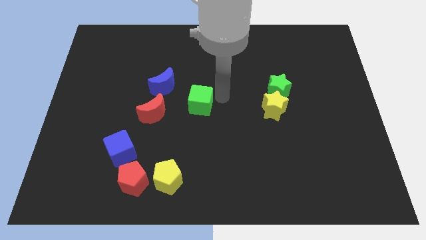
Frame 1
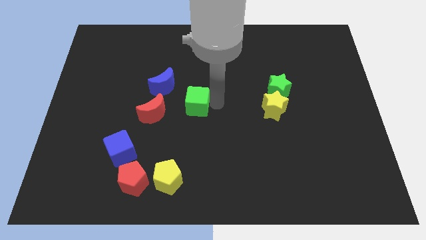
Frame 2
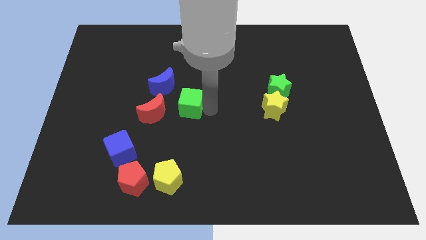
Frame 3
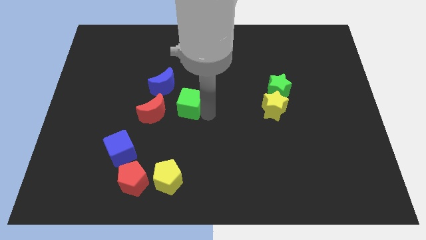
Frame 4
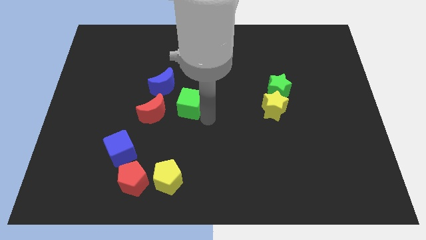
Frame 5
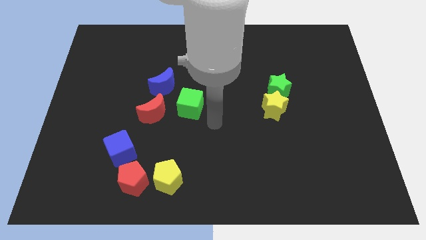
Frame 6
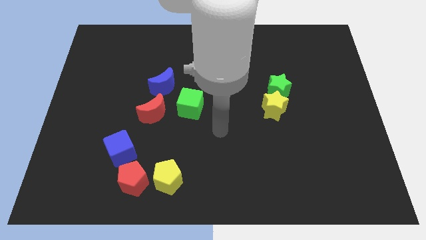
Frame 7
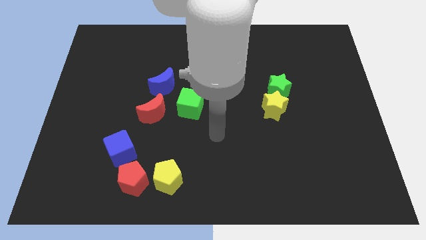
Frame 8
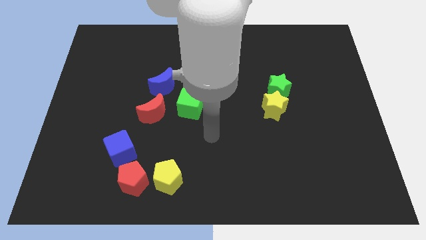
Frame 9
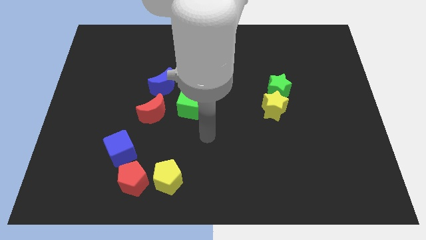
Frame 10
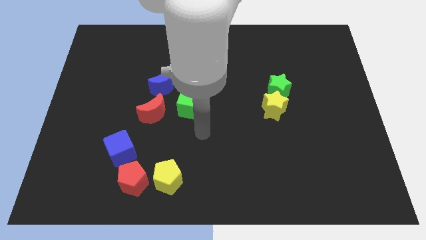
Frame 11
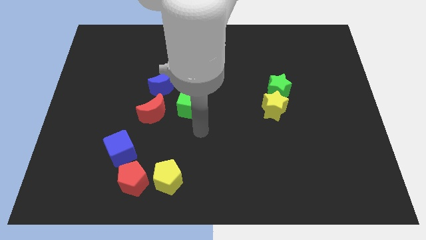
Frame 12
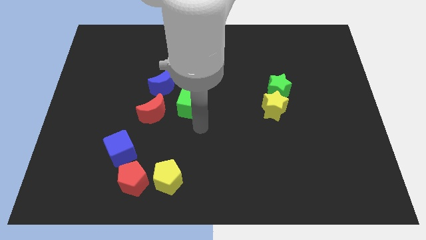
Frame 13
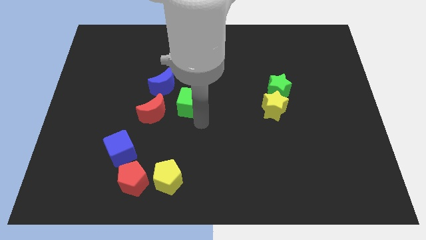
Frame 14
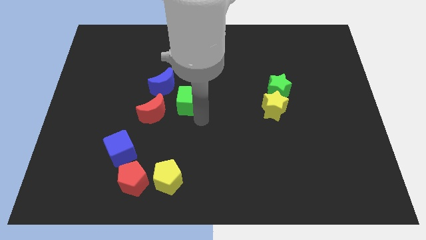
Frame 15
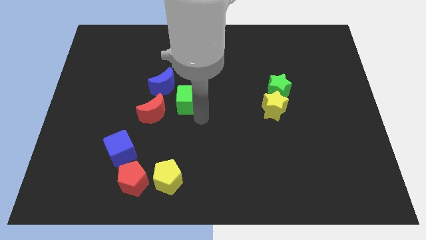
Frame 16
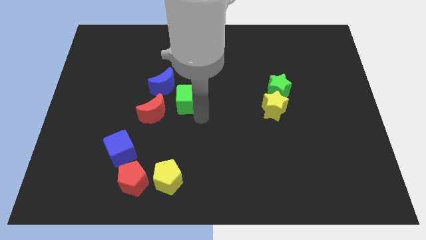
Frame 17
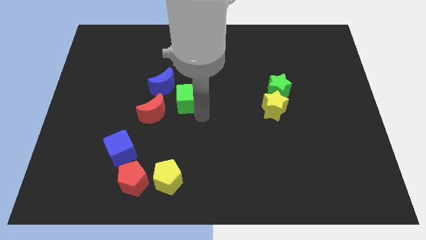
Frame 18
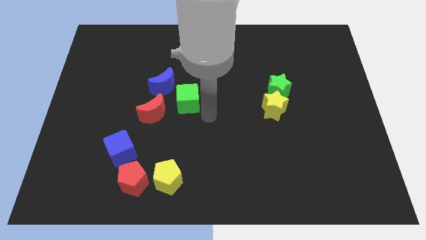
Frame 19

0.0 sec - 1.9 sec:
place green cube a bit near to red crescent and blue crescent

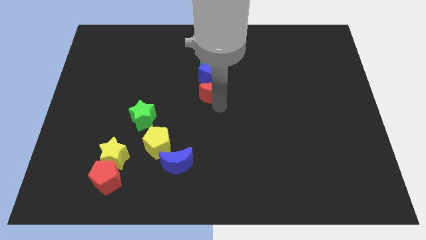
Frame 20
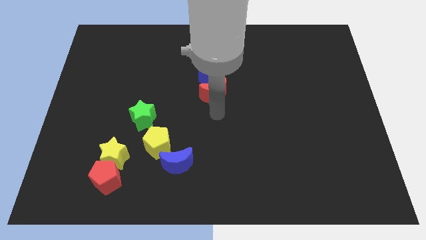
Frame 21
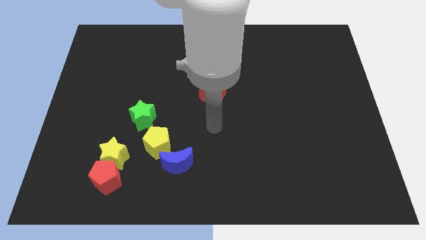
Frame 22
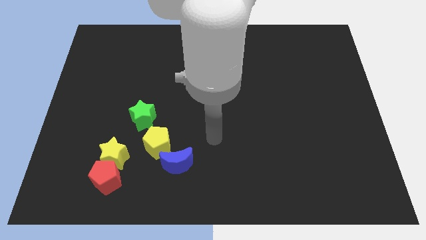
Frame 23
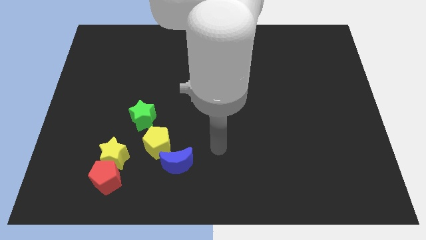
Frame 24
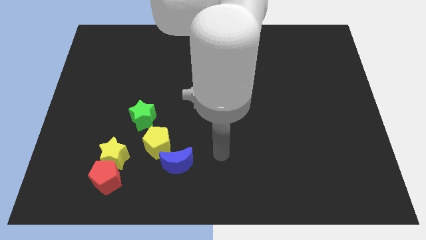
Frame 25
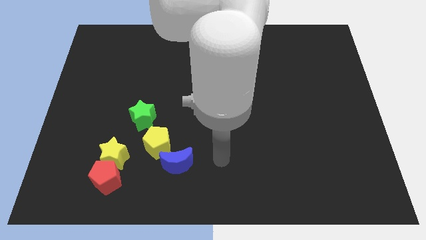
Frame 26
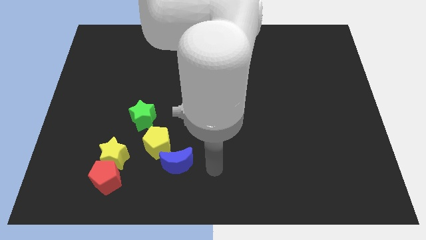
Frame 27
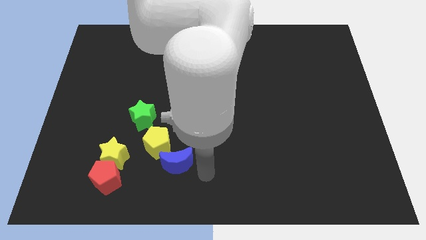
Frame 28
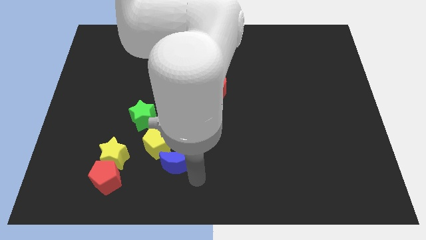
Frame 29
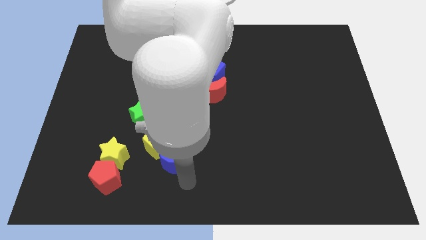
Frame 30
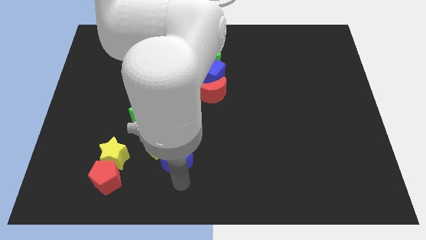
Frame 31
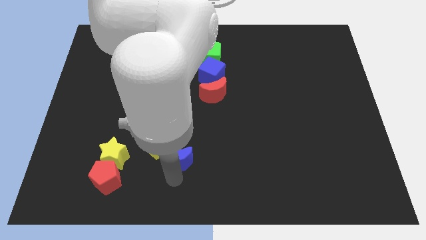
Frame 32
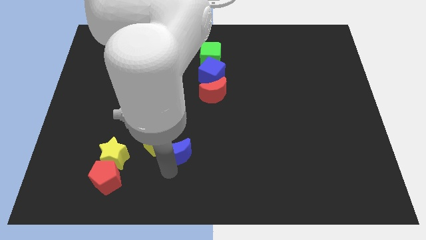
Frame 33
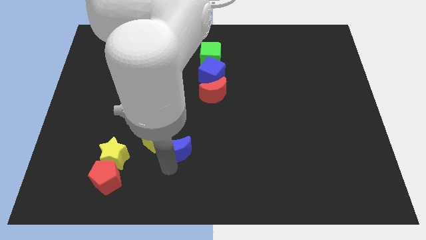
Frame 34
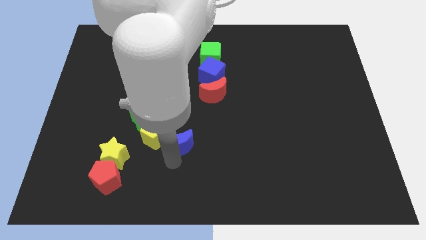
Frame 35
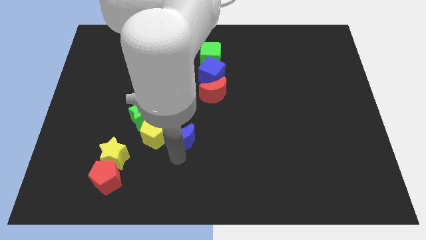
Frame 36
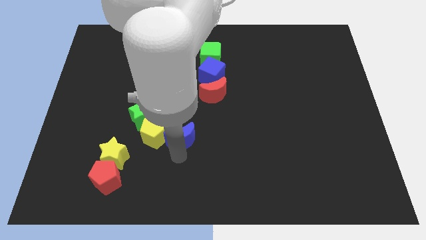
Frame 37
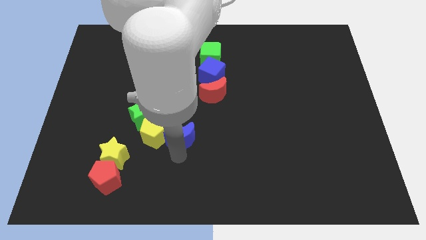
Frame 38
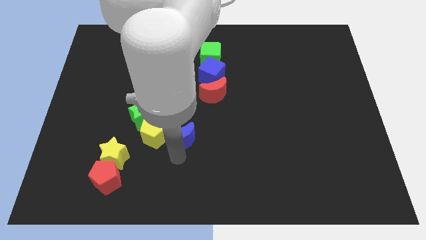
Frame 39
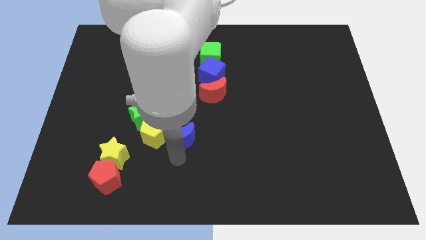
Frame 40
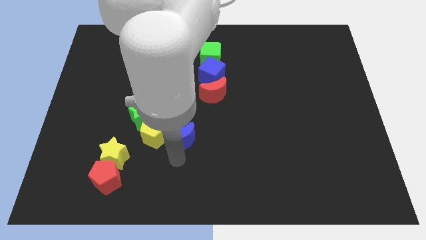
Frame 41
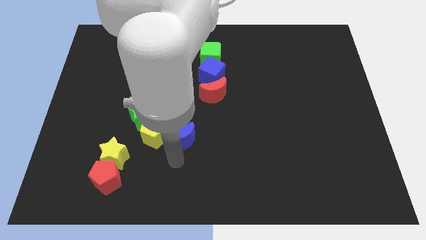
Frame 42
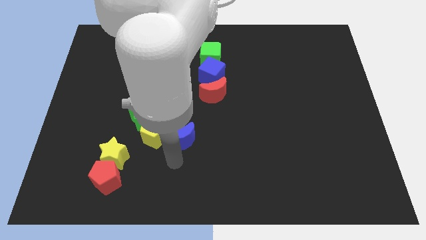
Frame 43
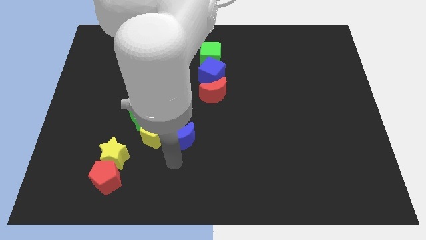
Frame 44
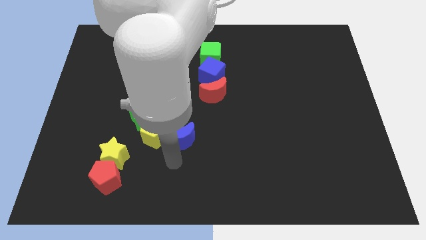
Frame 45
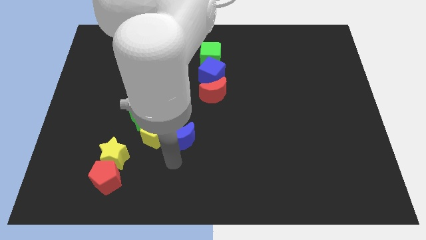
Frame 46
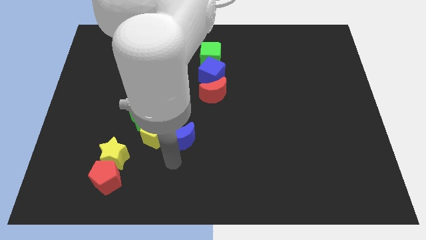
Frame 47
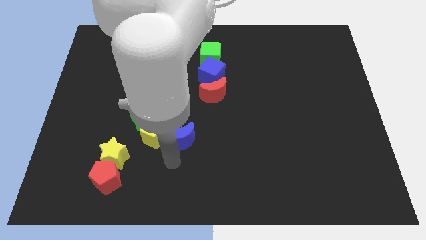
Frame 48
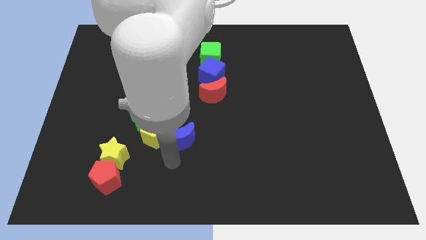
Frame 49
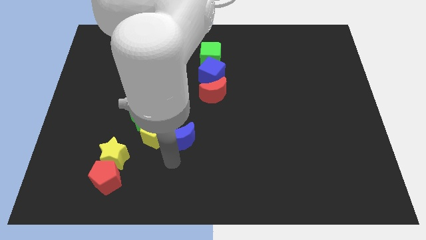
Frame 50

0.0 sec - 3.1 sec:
push the blue crescent to the right of the yellow pentagon

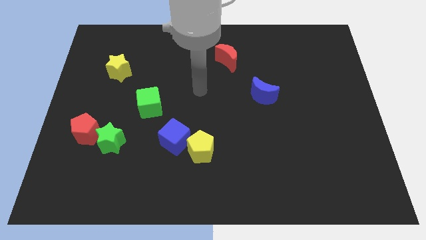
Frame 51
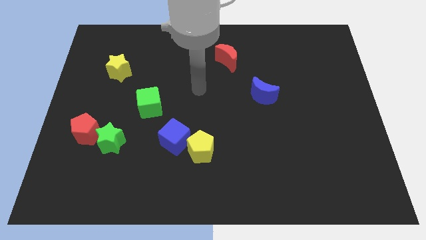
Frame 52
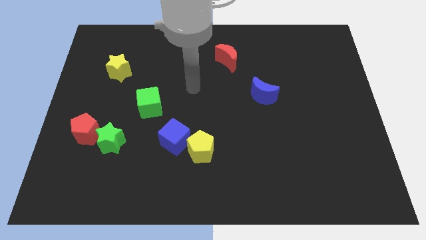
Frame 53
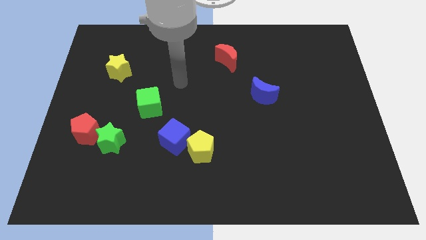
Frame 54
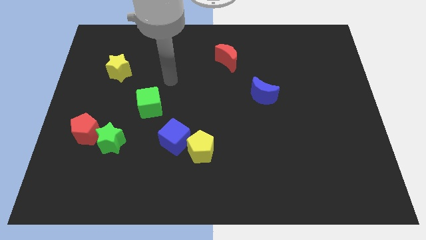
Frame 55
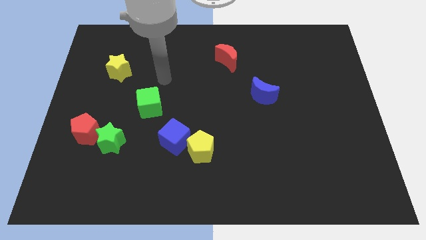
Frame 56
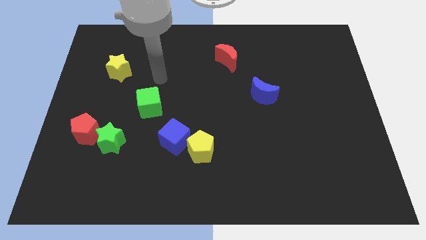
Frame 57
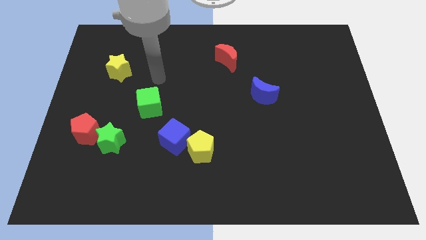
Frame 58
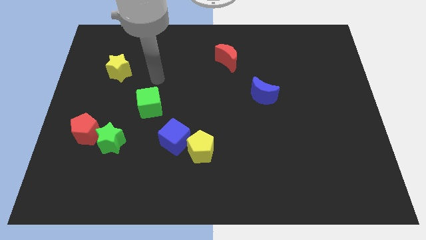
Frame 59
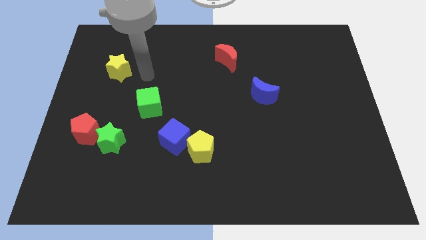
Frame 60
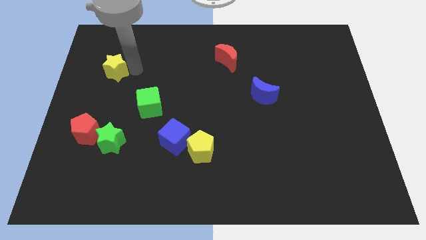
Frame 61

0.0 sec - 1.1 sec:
touch the right side of the yellow star

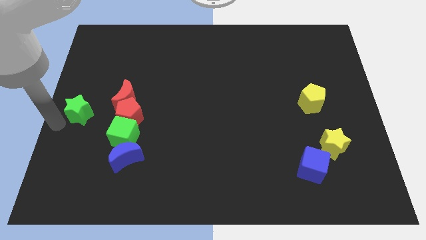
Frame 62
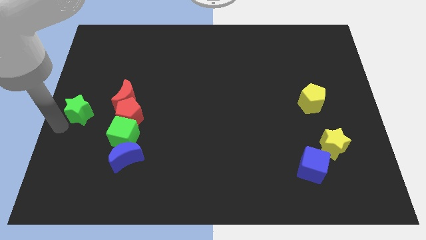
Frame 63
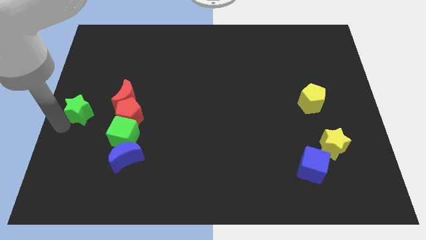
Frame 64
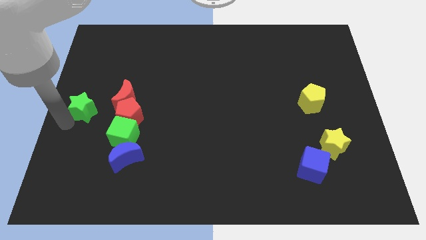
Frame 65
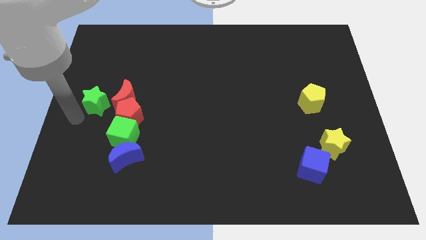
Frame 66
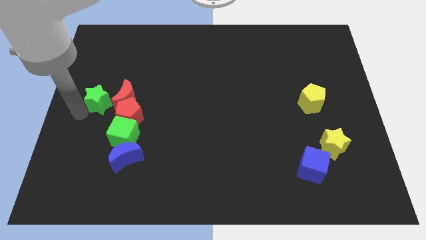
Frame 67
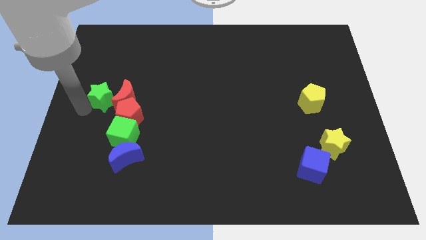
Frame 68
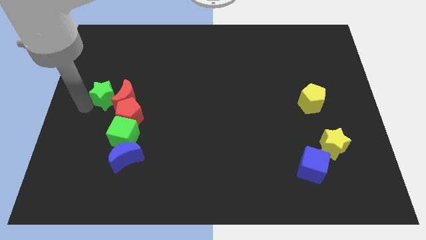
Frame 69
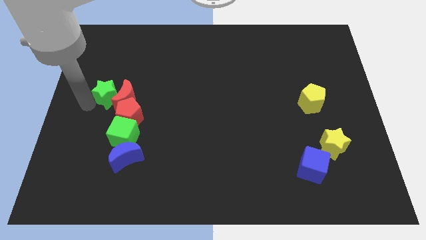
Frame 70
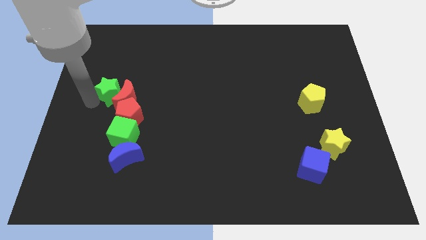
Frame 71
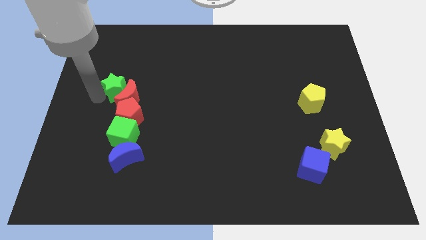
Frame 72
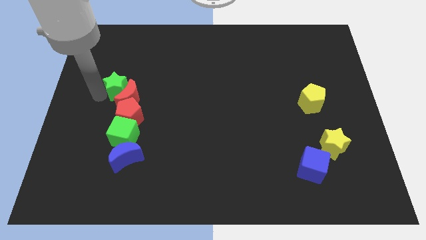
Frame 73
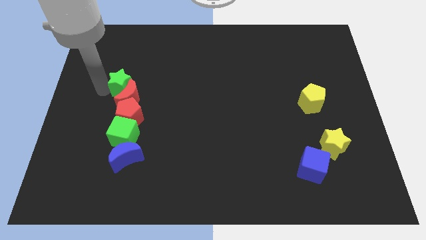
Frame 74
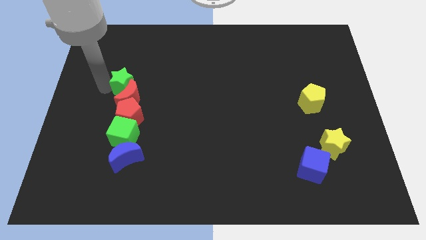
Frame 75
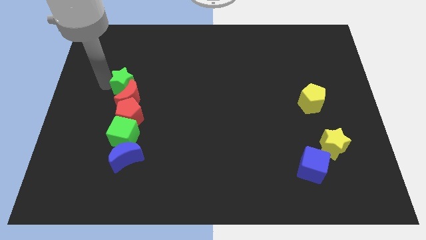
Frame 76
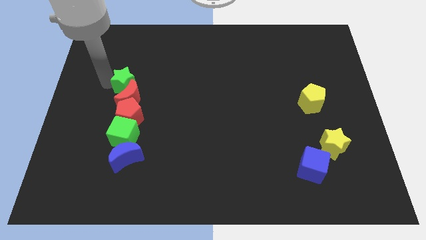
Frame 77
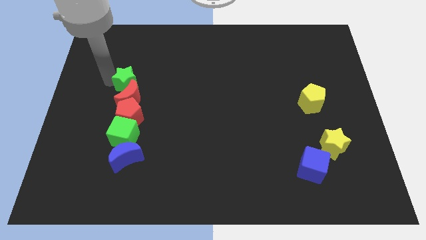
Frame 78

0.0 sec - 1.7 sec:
place the green star above the red crescent

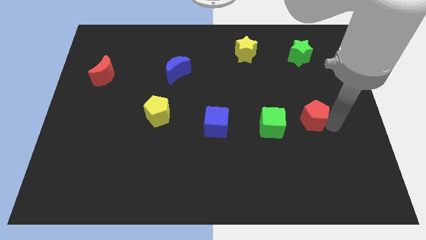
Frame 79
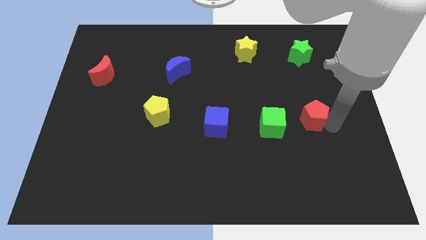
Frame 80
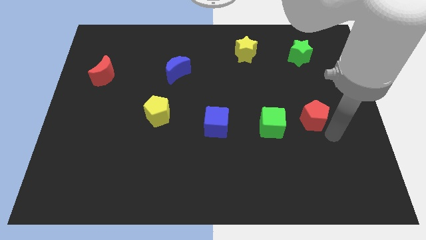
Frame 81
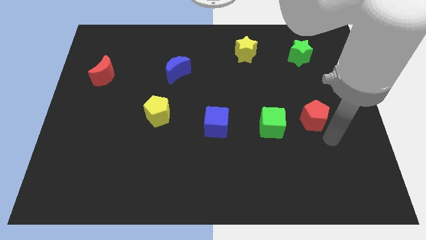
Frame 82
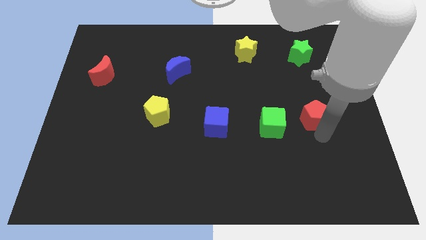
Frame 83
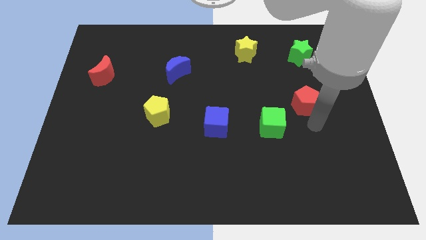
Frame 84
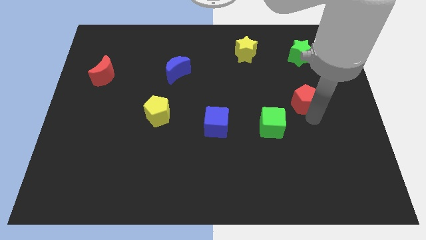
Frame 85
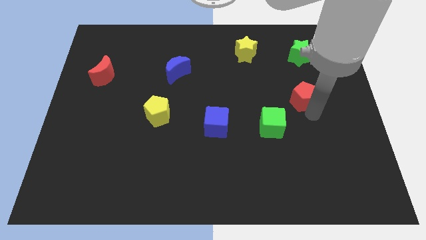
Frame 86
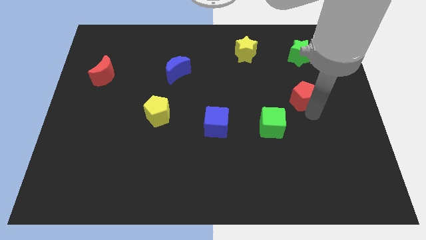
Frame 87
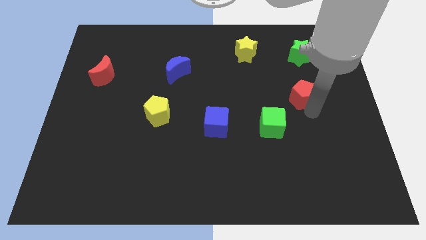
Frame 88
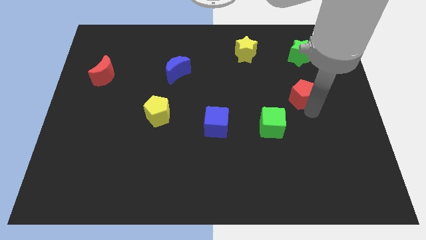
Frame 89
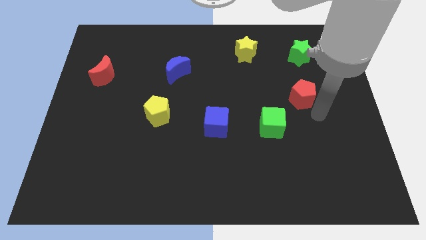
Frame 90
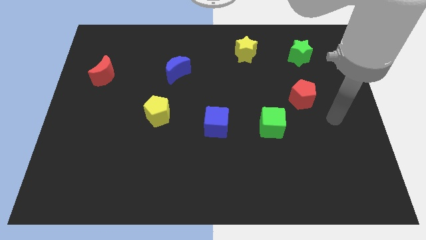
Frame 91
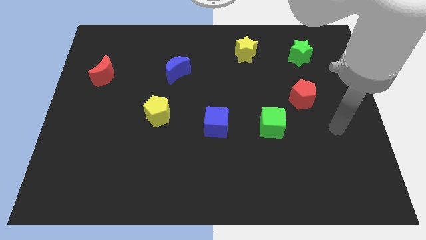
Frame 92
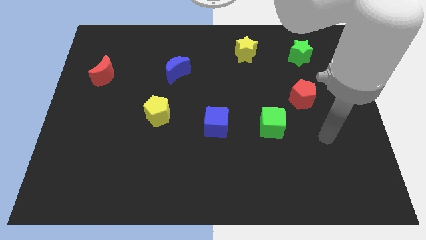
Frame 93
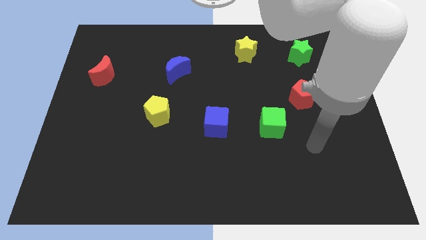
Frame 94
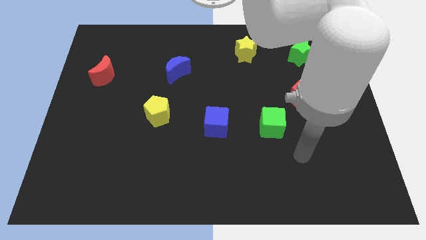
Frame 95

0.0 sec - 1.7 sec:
place the red pentagon below the green star
